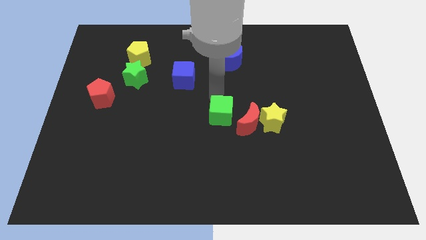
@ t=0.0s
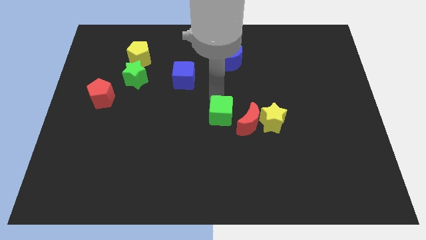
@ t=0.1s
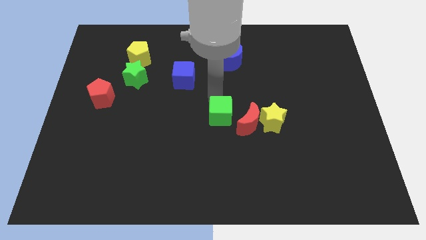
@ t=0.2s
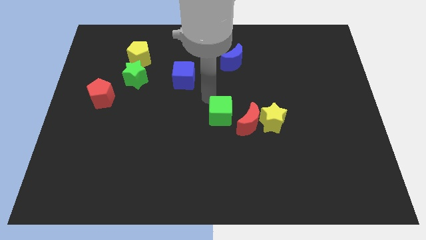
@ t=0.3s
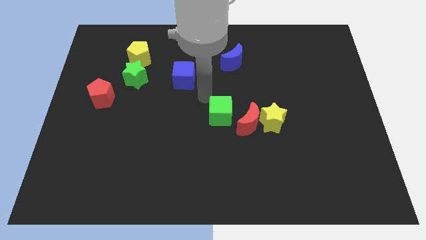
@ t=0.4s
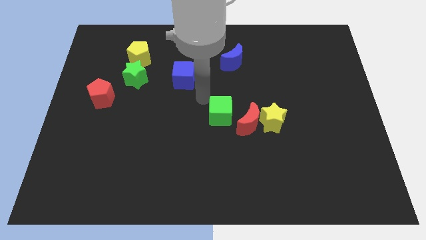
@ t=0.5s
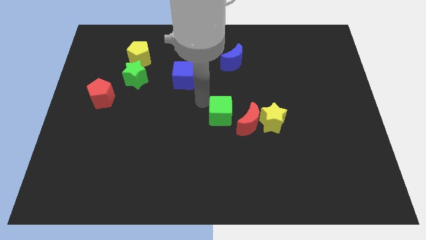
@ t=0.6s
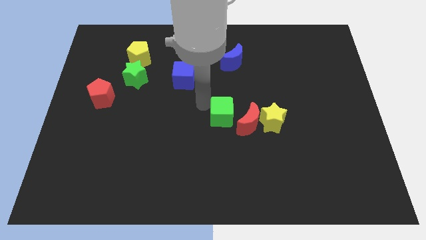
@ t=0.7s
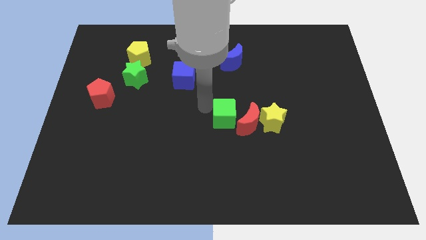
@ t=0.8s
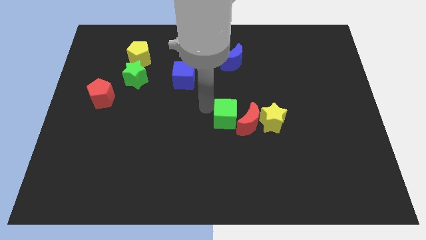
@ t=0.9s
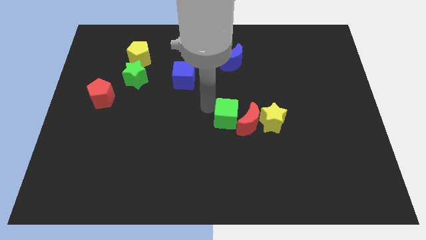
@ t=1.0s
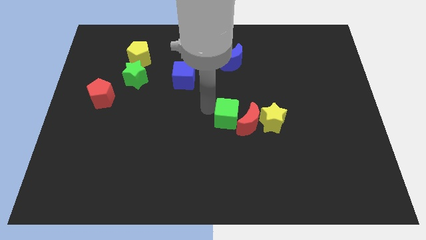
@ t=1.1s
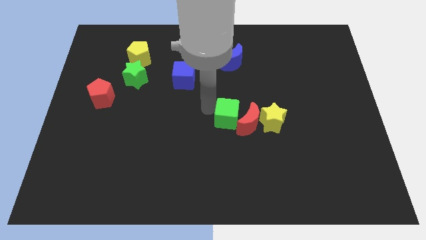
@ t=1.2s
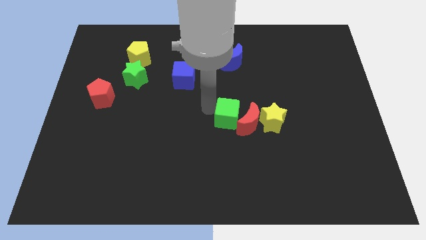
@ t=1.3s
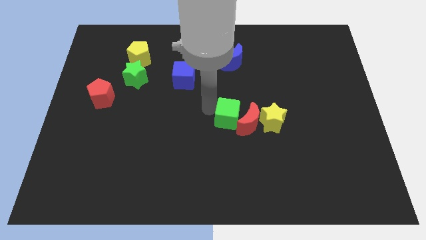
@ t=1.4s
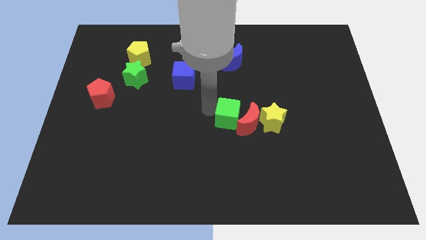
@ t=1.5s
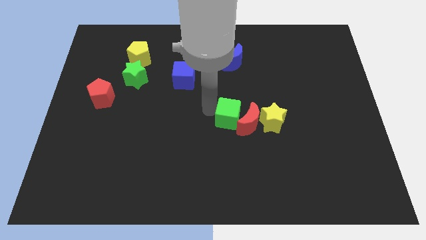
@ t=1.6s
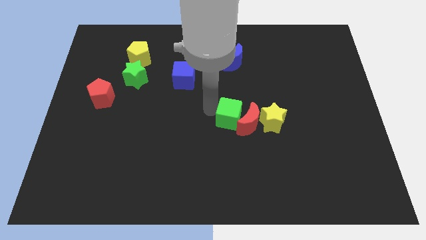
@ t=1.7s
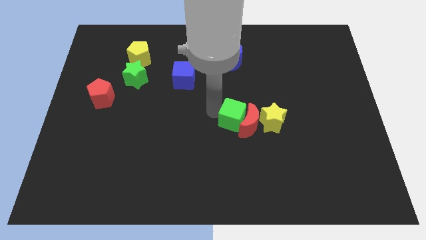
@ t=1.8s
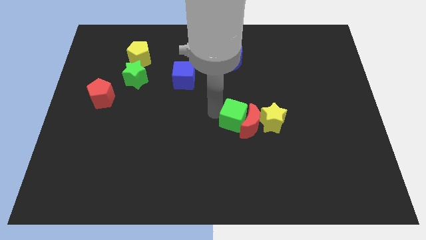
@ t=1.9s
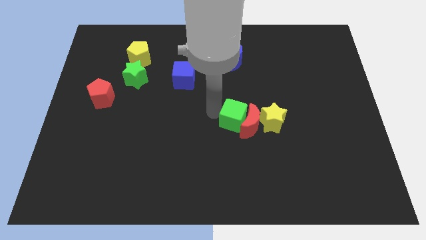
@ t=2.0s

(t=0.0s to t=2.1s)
move the green cube into the left side of the red moon

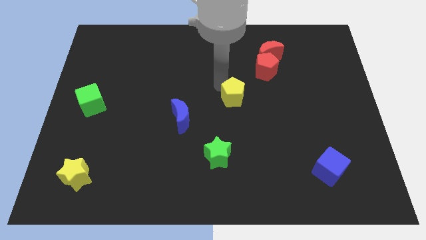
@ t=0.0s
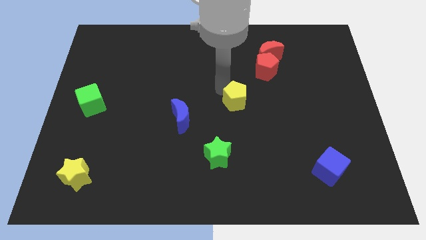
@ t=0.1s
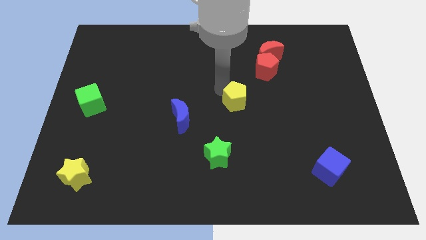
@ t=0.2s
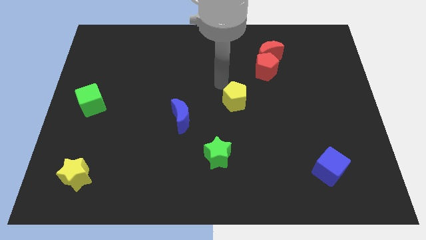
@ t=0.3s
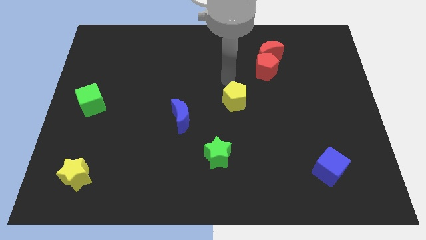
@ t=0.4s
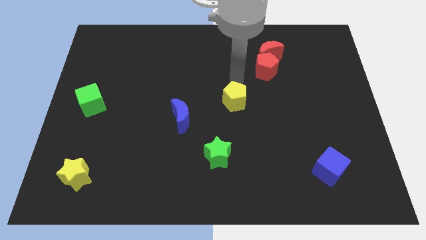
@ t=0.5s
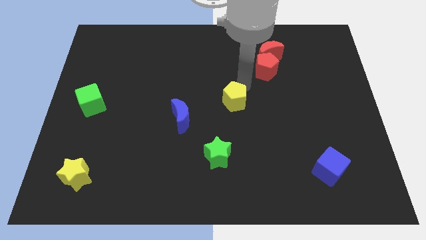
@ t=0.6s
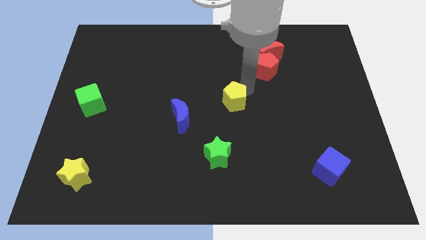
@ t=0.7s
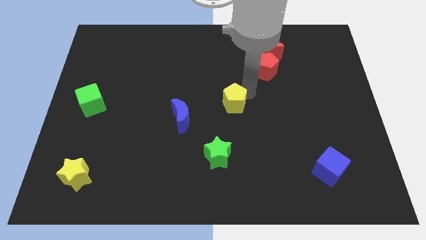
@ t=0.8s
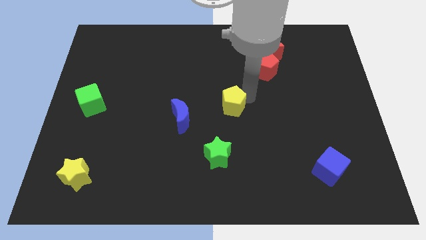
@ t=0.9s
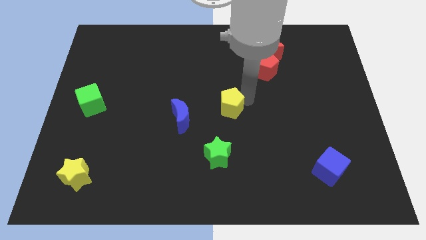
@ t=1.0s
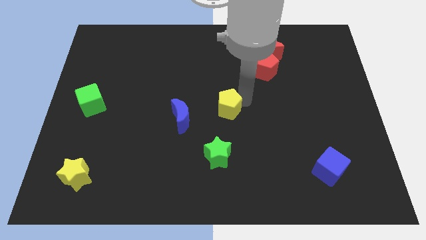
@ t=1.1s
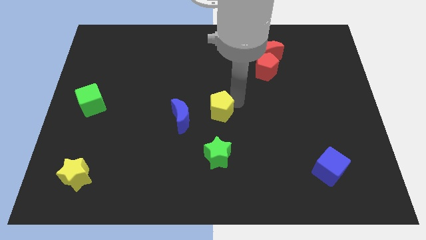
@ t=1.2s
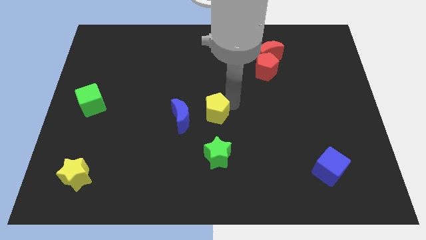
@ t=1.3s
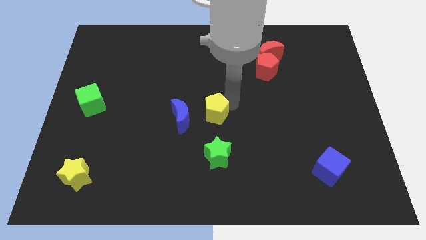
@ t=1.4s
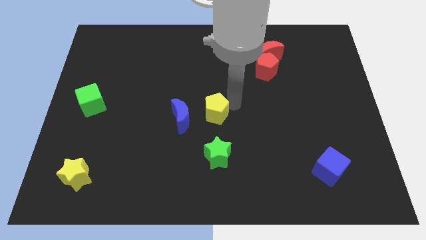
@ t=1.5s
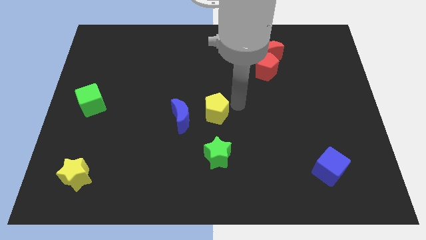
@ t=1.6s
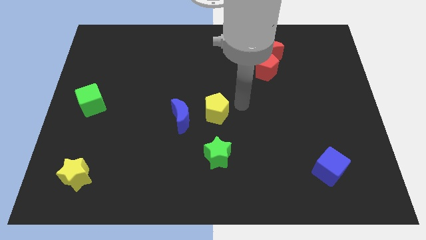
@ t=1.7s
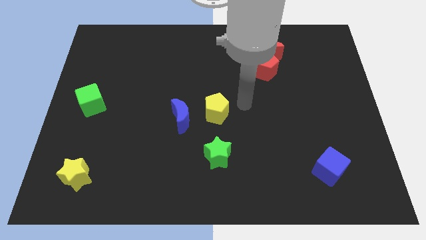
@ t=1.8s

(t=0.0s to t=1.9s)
move the yellow pentagon to the right of the blue crescent

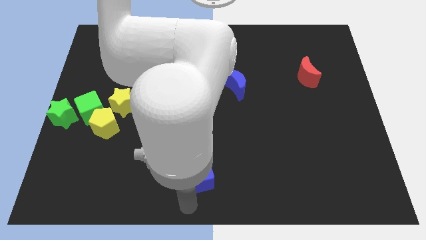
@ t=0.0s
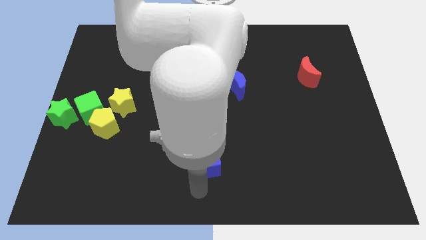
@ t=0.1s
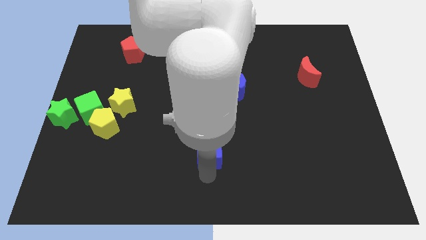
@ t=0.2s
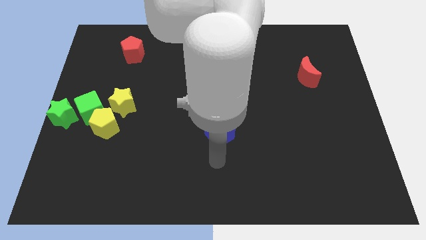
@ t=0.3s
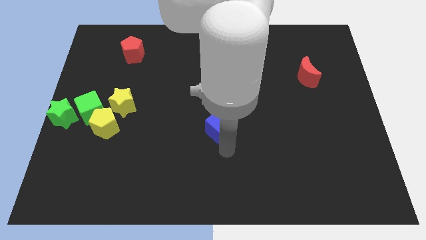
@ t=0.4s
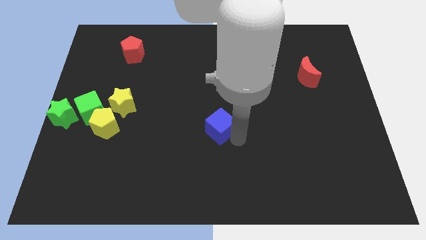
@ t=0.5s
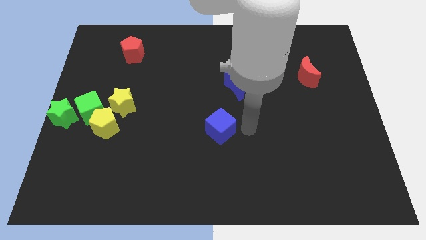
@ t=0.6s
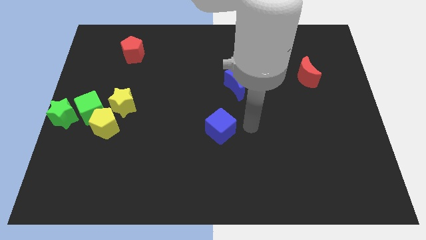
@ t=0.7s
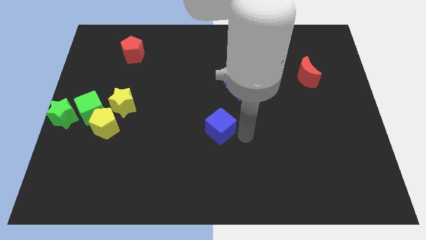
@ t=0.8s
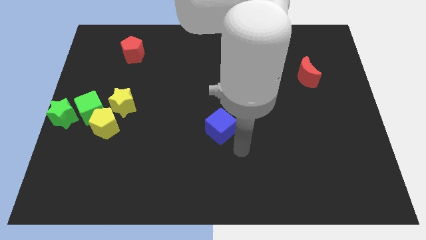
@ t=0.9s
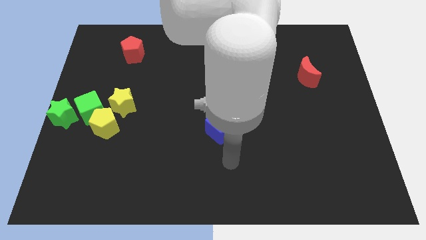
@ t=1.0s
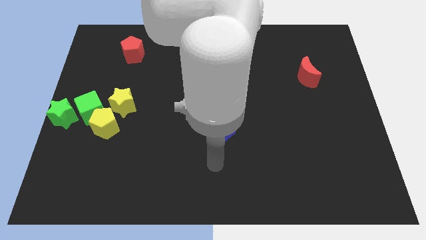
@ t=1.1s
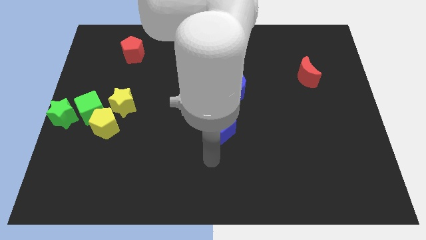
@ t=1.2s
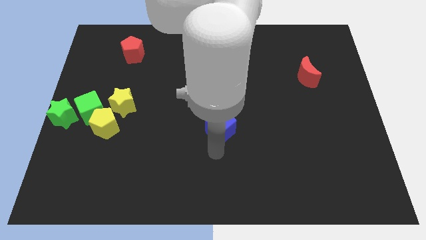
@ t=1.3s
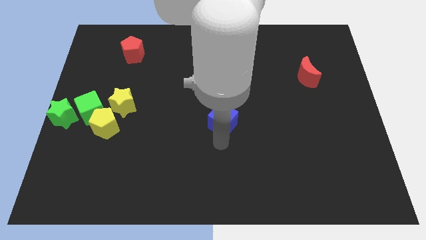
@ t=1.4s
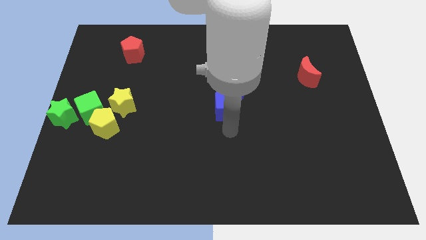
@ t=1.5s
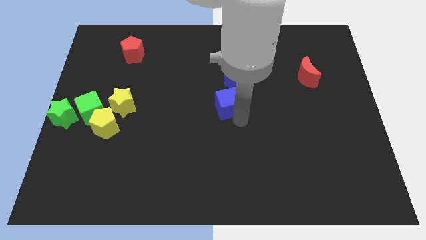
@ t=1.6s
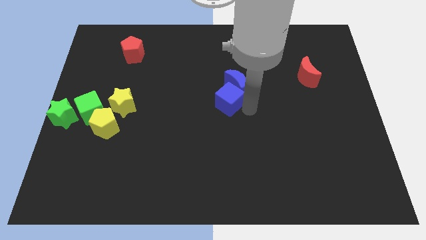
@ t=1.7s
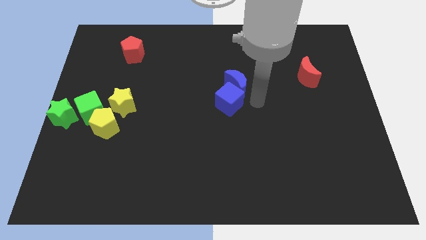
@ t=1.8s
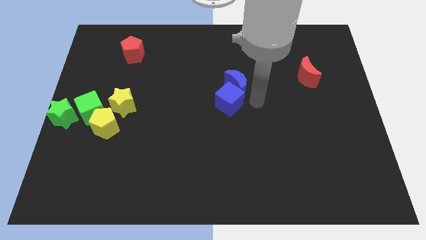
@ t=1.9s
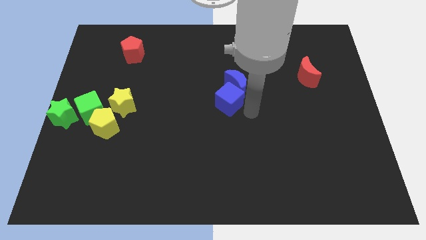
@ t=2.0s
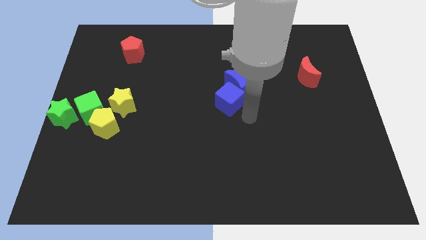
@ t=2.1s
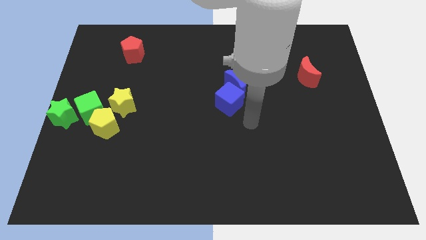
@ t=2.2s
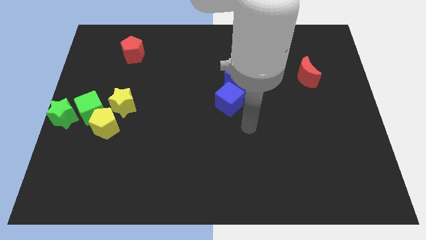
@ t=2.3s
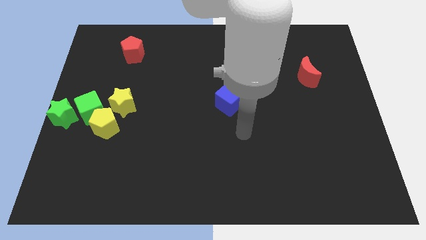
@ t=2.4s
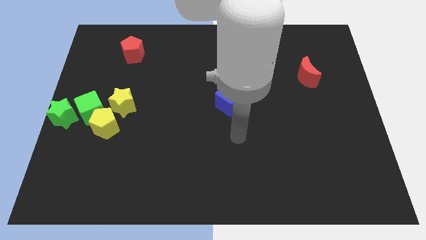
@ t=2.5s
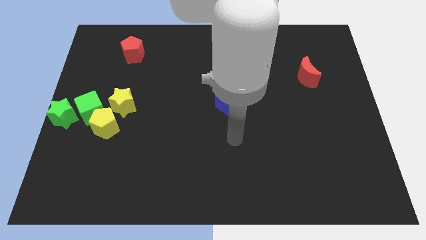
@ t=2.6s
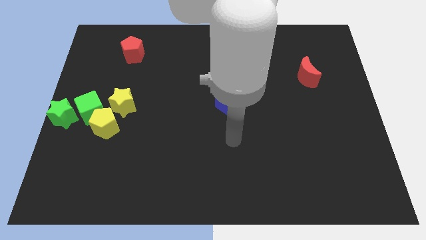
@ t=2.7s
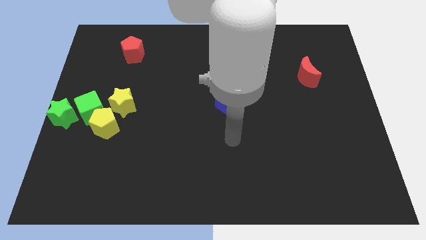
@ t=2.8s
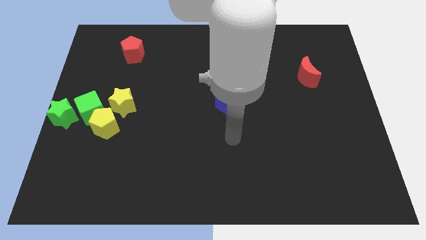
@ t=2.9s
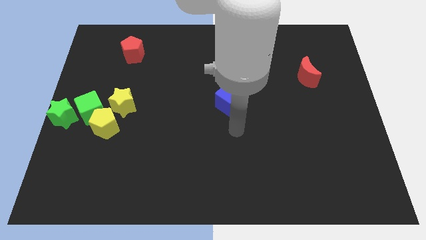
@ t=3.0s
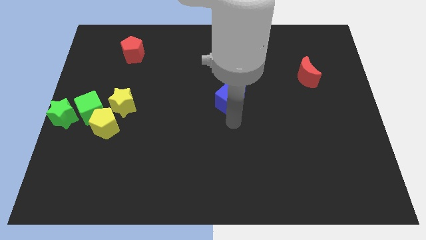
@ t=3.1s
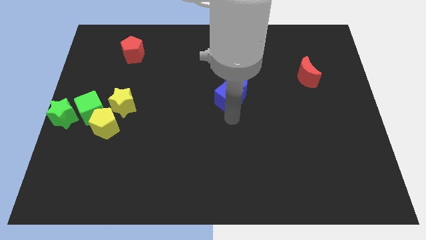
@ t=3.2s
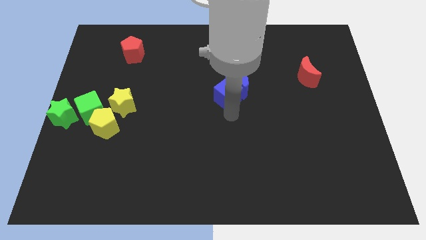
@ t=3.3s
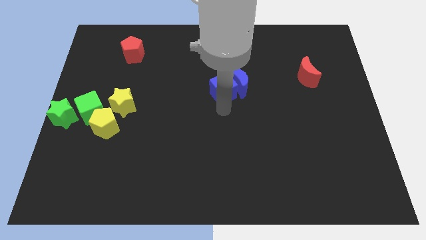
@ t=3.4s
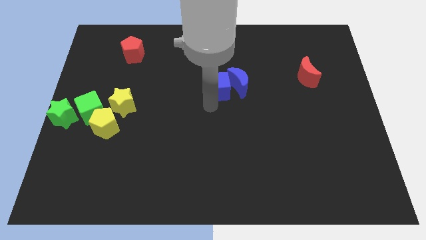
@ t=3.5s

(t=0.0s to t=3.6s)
move the blue cube left to the blue moon

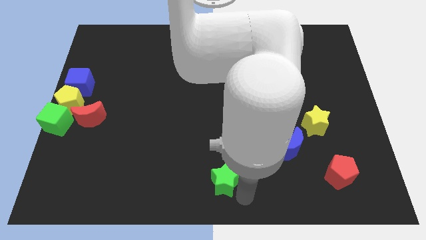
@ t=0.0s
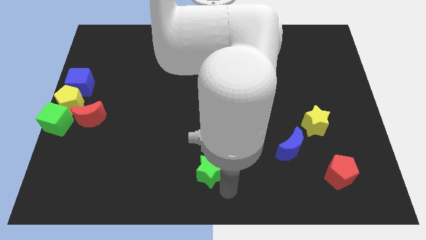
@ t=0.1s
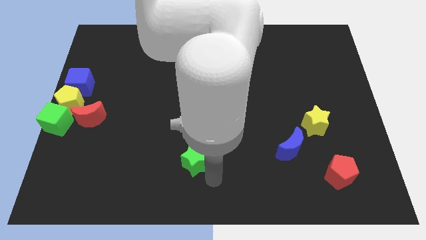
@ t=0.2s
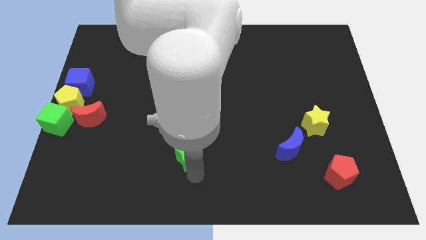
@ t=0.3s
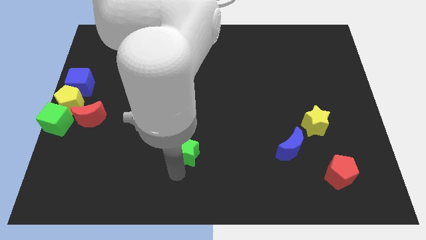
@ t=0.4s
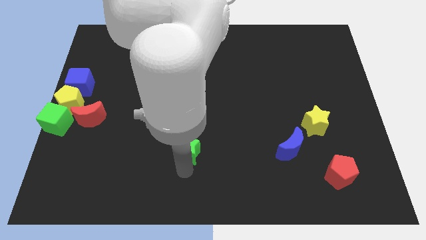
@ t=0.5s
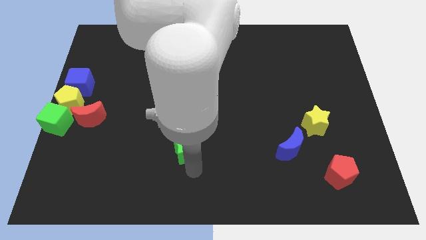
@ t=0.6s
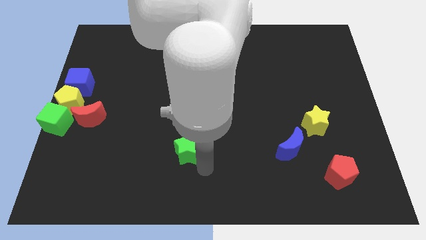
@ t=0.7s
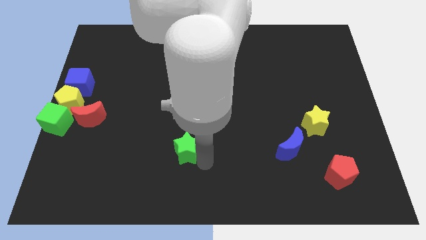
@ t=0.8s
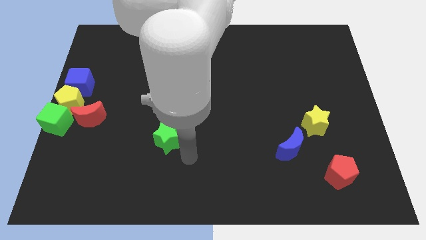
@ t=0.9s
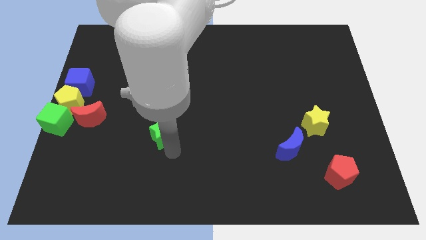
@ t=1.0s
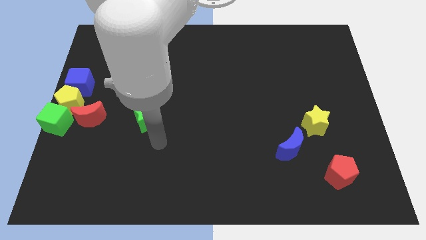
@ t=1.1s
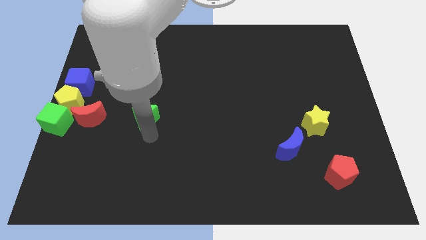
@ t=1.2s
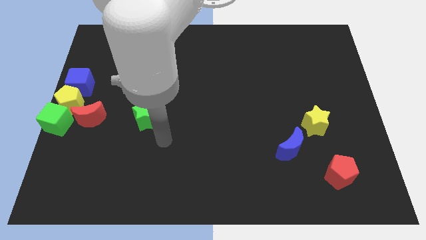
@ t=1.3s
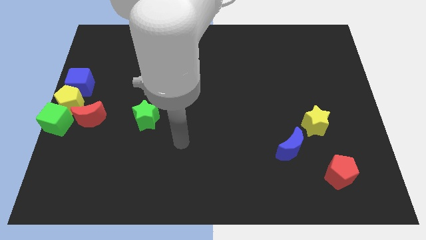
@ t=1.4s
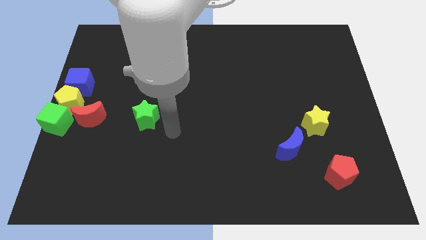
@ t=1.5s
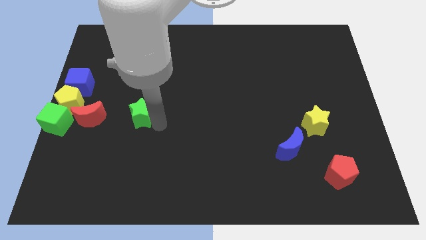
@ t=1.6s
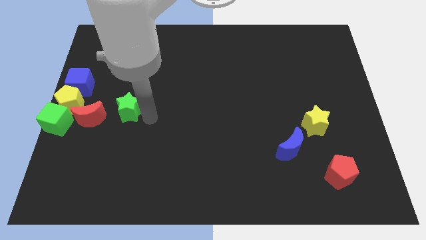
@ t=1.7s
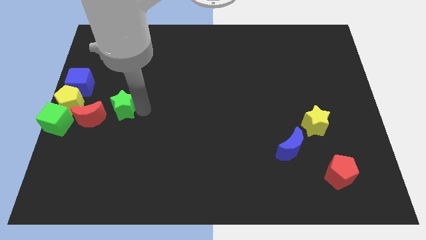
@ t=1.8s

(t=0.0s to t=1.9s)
slide the green star from bottom center to center left side of the board
